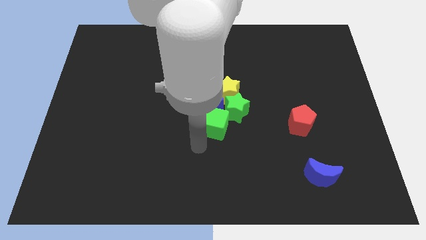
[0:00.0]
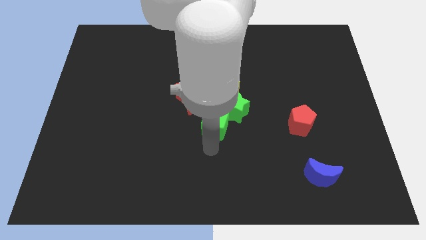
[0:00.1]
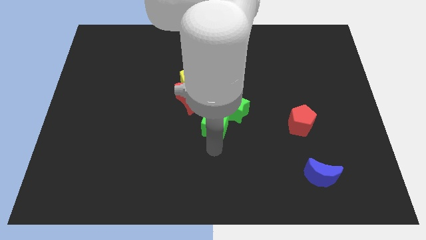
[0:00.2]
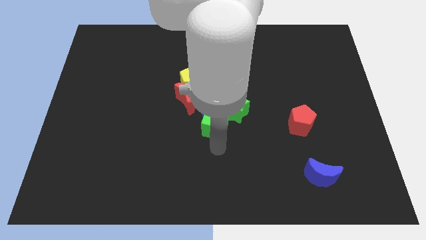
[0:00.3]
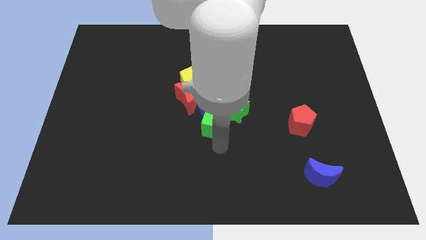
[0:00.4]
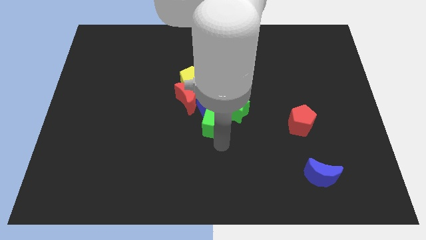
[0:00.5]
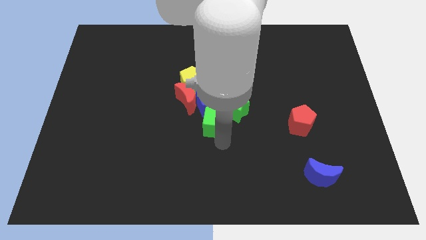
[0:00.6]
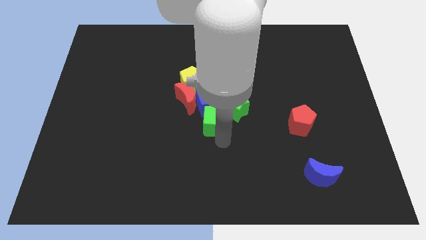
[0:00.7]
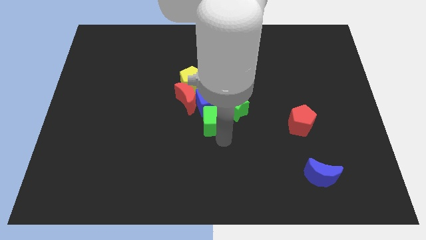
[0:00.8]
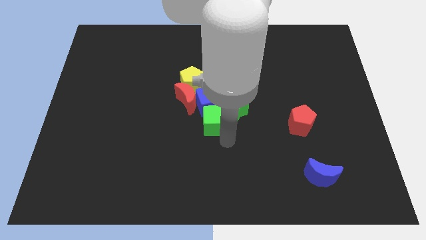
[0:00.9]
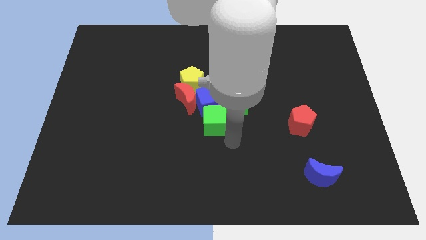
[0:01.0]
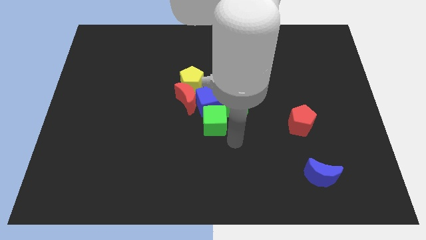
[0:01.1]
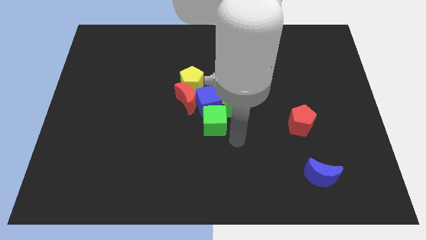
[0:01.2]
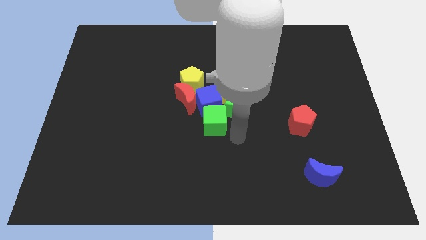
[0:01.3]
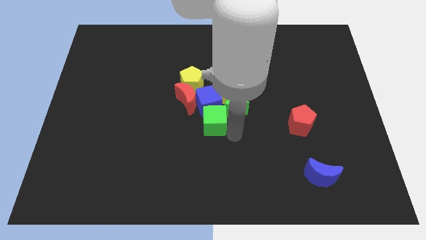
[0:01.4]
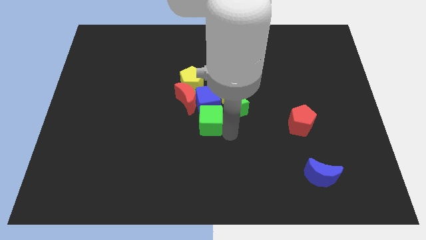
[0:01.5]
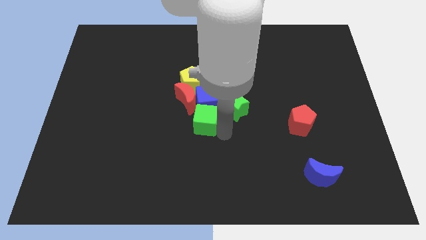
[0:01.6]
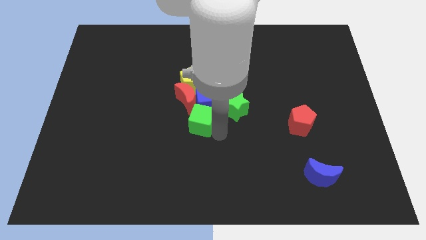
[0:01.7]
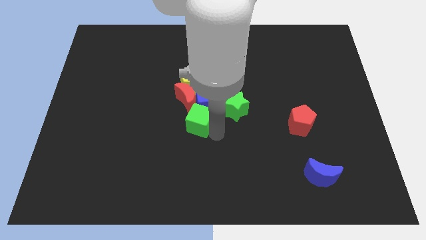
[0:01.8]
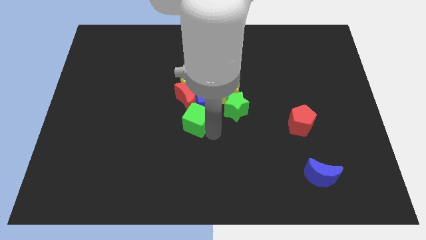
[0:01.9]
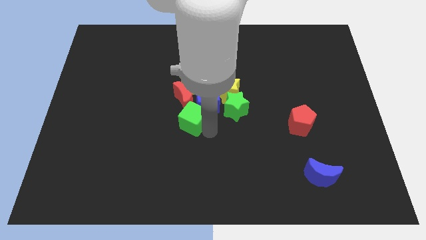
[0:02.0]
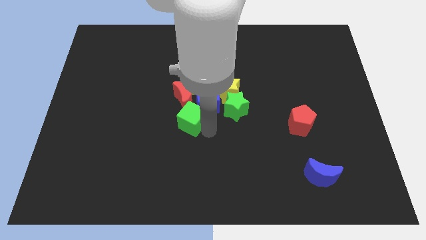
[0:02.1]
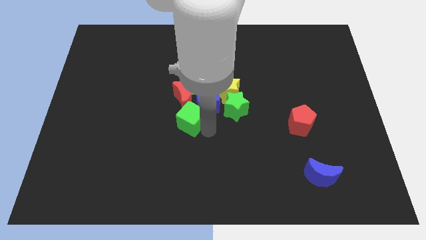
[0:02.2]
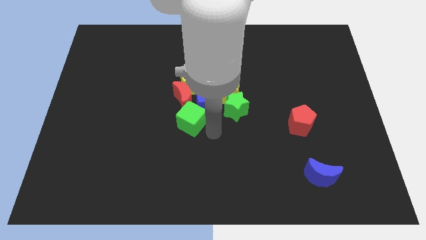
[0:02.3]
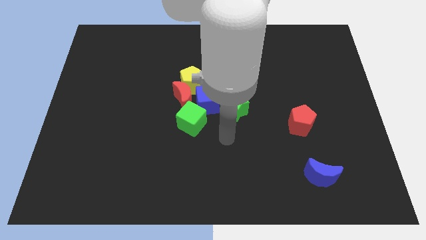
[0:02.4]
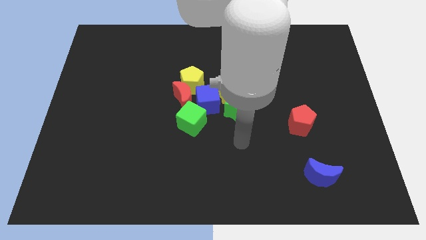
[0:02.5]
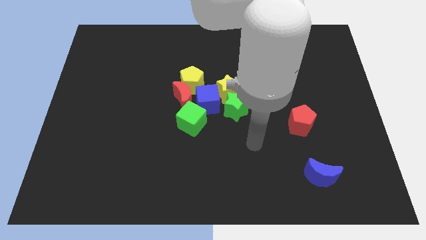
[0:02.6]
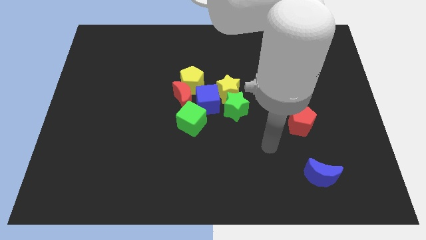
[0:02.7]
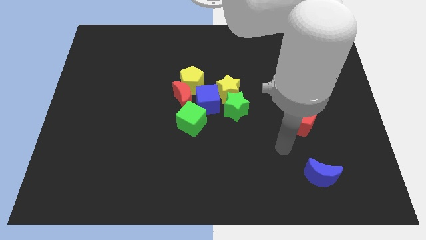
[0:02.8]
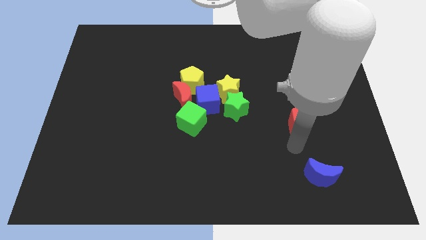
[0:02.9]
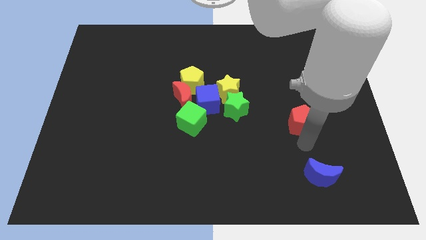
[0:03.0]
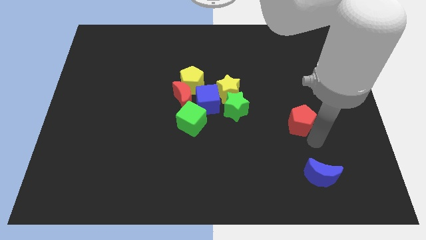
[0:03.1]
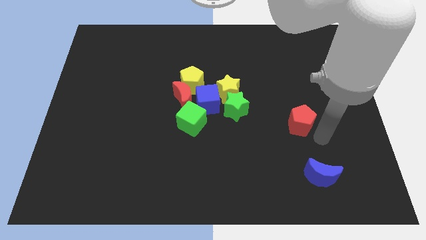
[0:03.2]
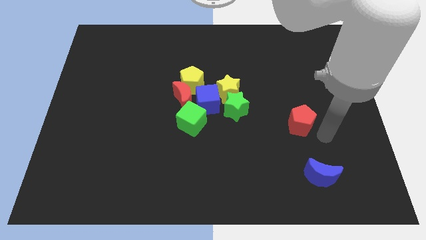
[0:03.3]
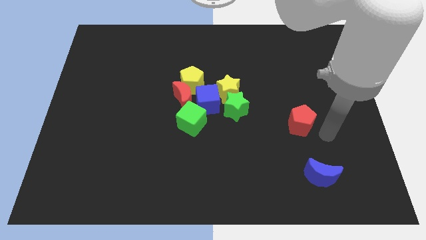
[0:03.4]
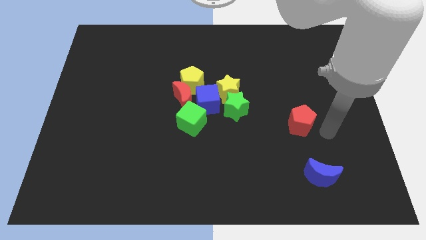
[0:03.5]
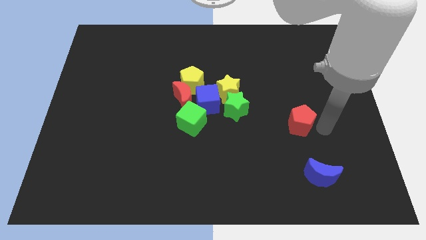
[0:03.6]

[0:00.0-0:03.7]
move the green cube below the red crescent

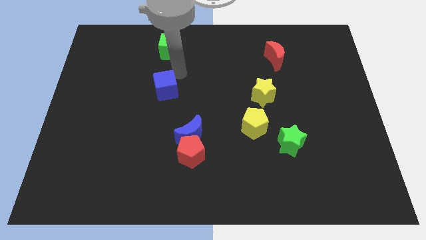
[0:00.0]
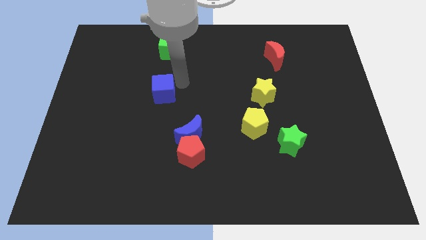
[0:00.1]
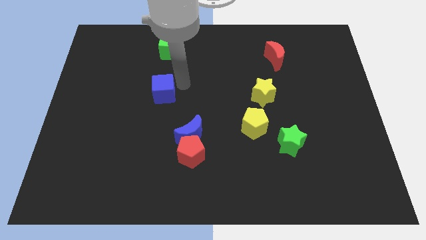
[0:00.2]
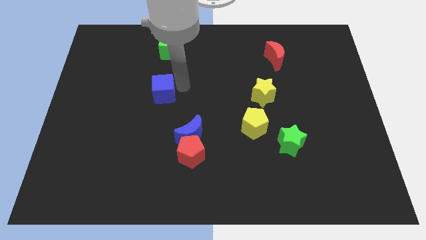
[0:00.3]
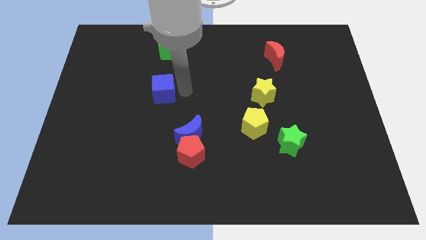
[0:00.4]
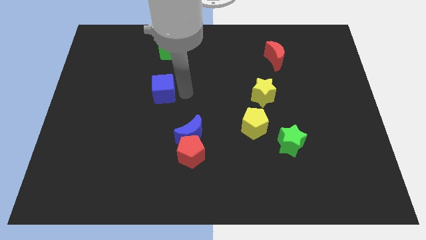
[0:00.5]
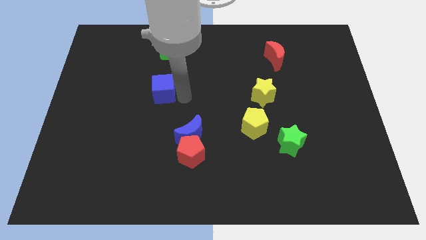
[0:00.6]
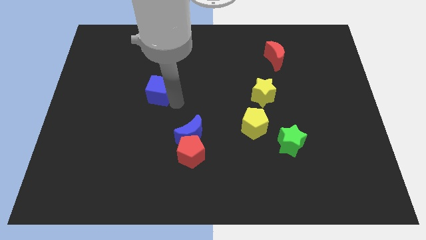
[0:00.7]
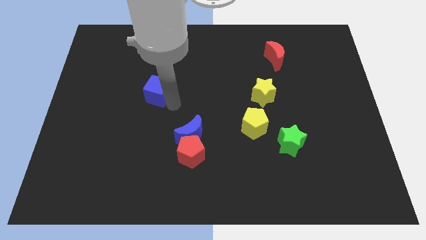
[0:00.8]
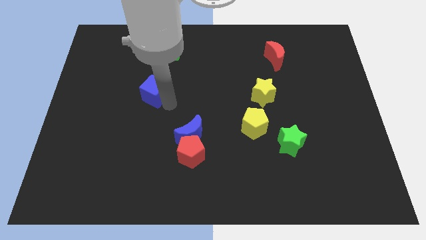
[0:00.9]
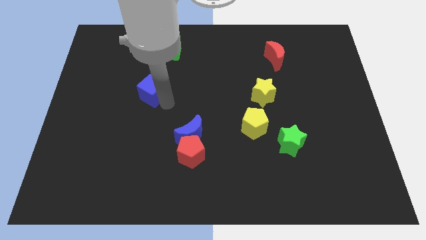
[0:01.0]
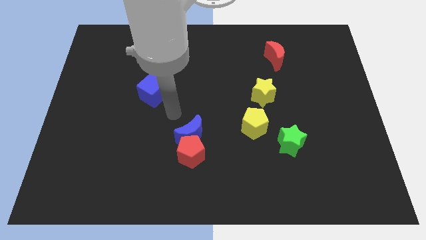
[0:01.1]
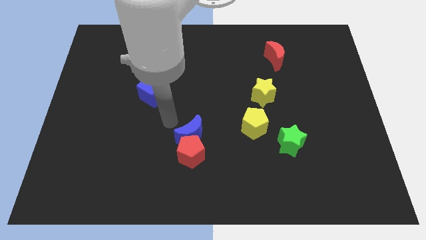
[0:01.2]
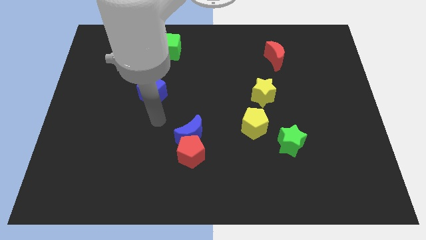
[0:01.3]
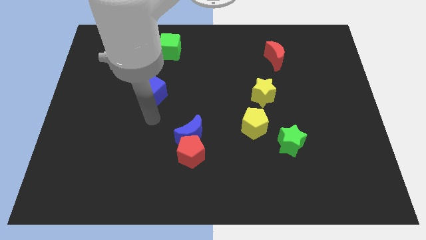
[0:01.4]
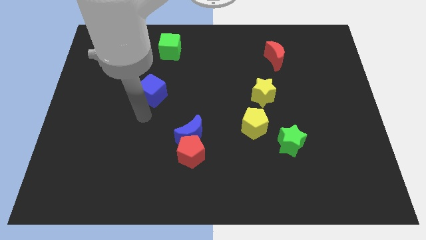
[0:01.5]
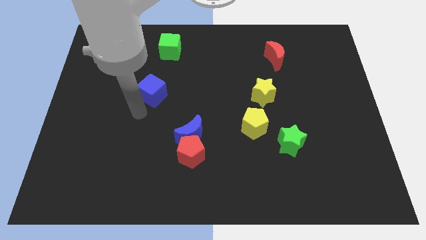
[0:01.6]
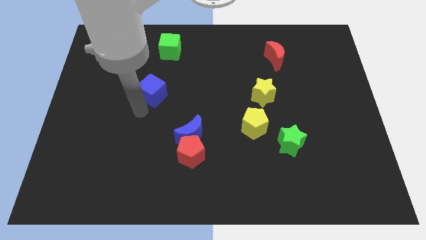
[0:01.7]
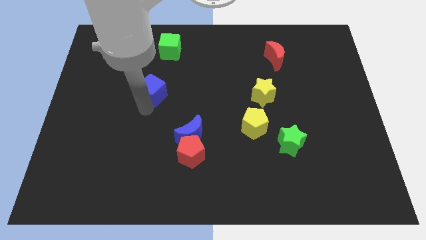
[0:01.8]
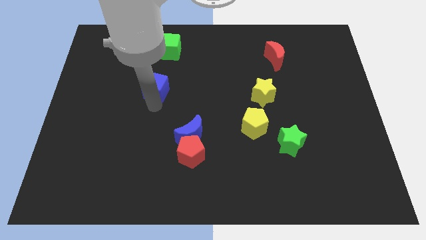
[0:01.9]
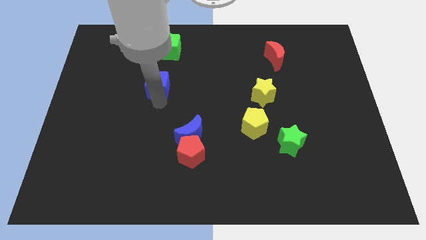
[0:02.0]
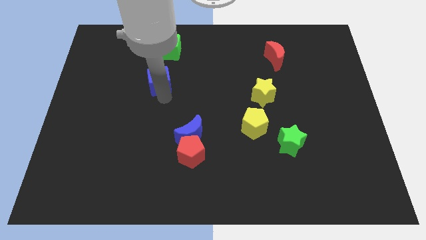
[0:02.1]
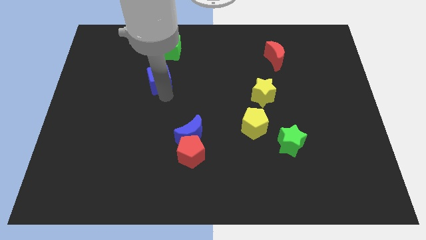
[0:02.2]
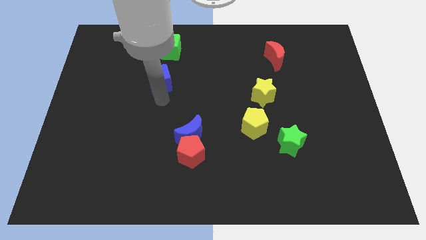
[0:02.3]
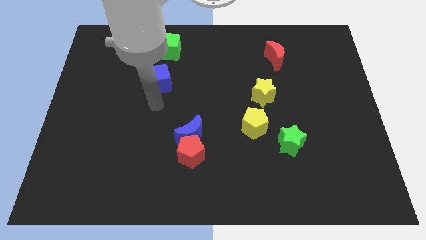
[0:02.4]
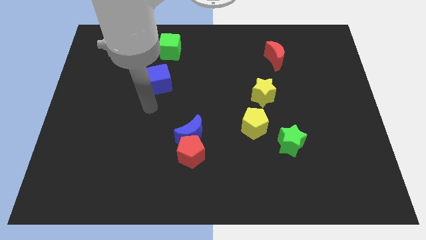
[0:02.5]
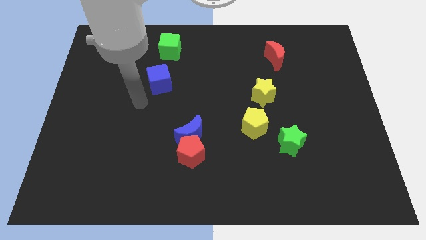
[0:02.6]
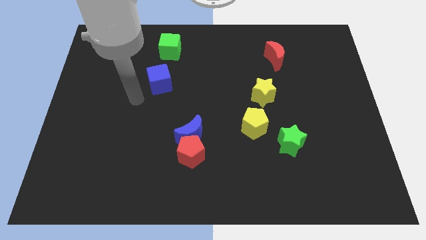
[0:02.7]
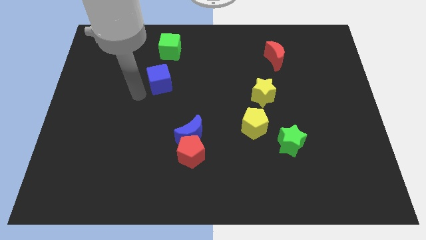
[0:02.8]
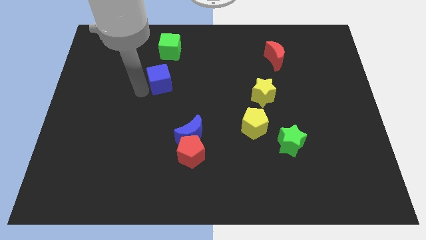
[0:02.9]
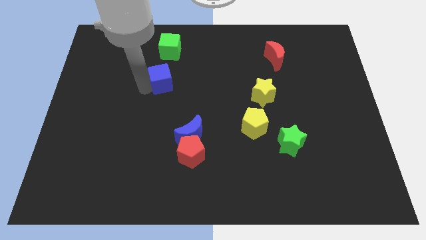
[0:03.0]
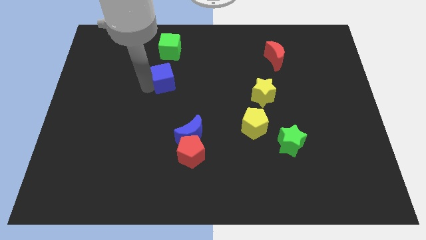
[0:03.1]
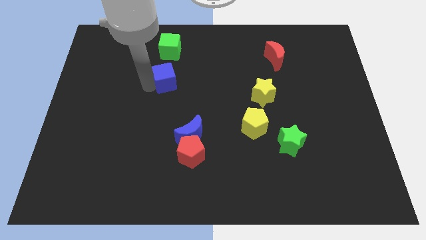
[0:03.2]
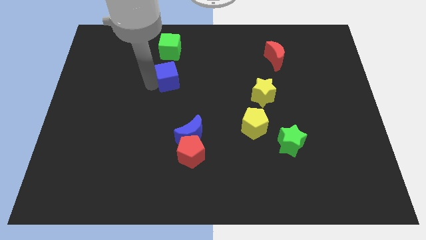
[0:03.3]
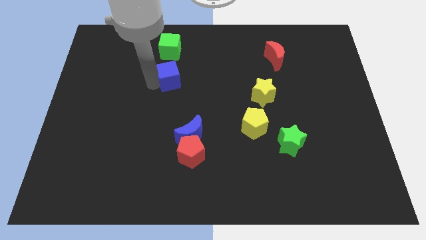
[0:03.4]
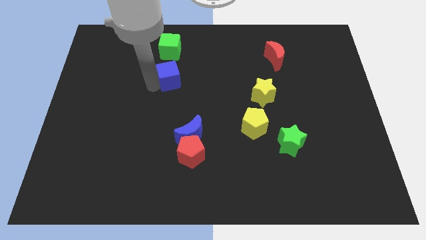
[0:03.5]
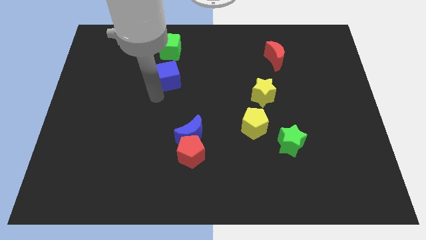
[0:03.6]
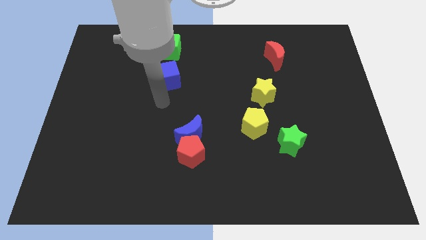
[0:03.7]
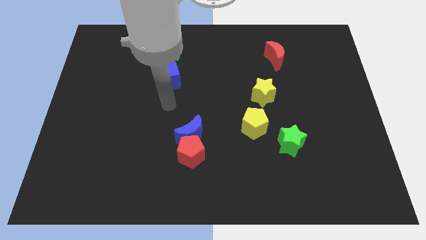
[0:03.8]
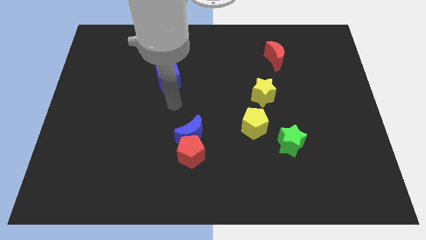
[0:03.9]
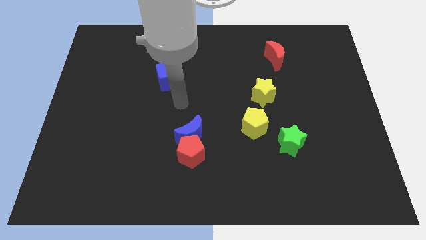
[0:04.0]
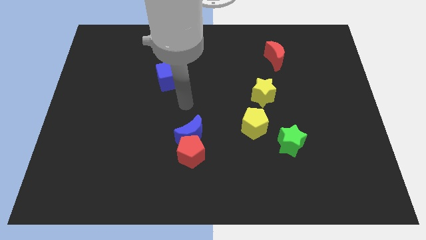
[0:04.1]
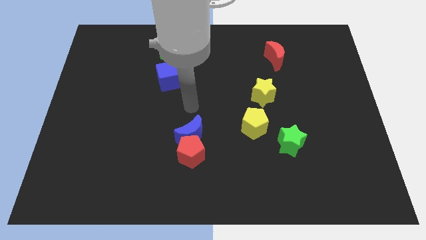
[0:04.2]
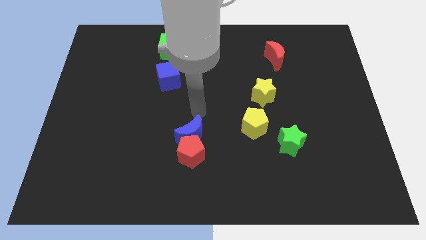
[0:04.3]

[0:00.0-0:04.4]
move the blue cube below green cube

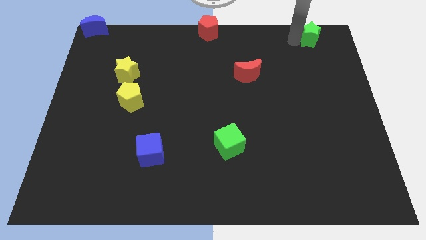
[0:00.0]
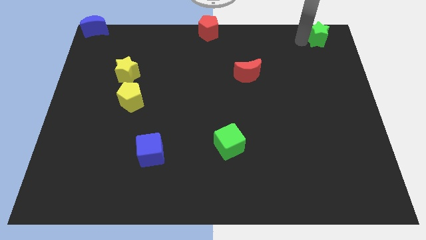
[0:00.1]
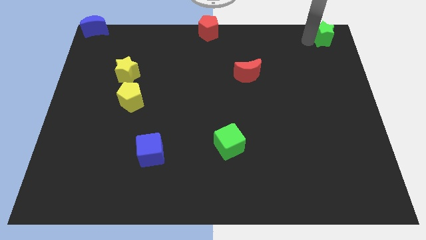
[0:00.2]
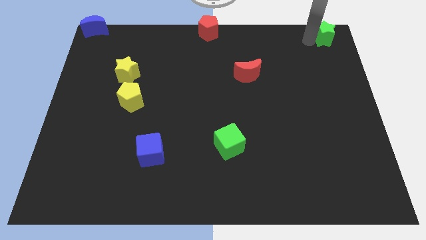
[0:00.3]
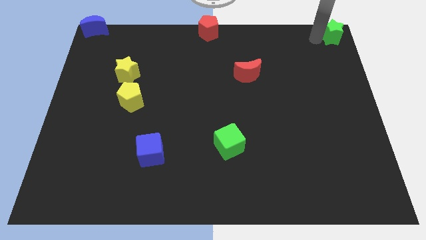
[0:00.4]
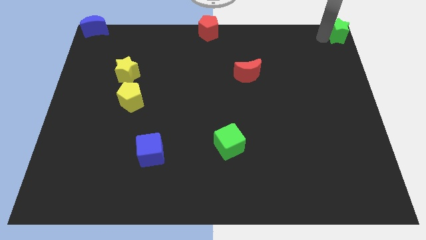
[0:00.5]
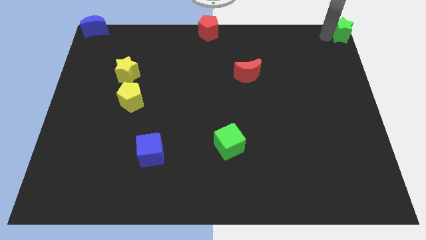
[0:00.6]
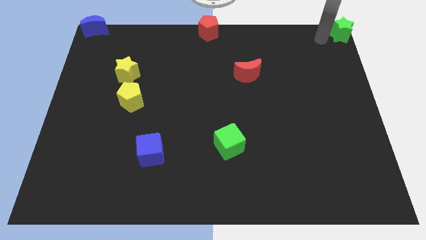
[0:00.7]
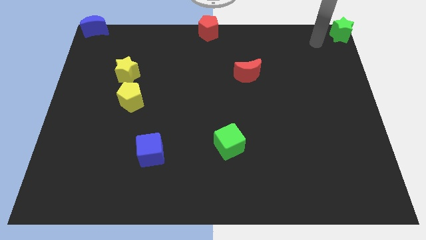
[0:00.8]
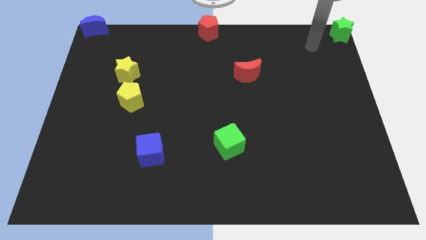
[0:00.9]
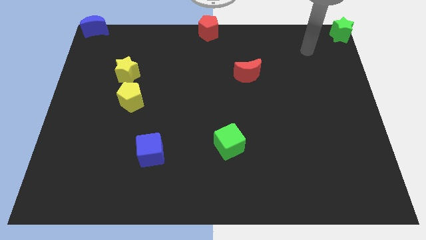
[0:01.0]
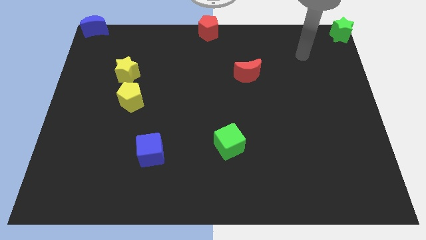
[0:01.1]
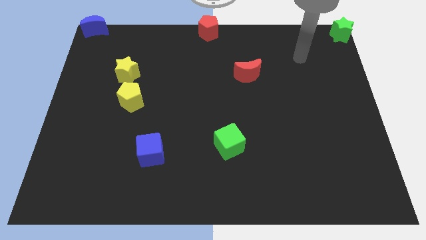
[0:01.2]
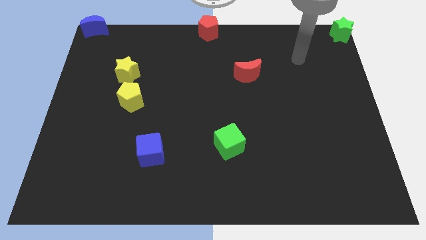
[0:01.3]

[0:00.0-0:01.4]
place the green star diagonally to red moon
